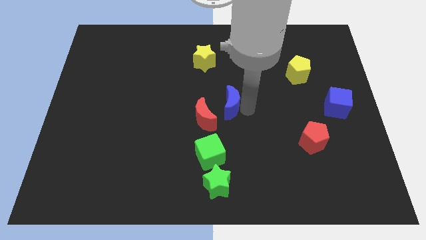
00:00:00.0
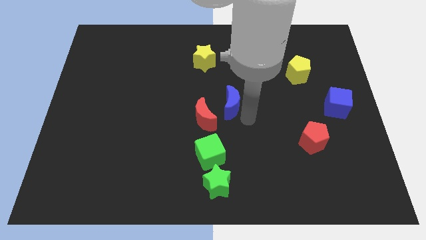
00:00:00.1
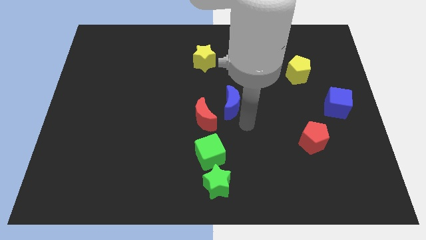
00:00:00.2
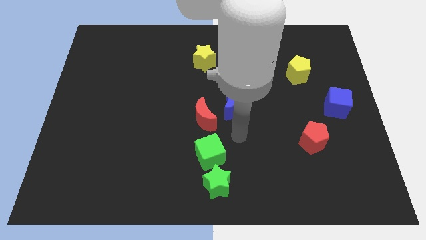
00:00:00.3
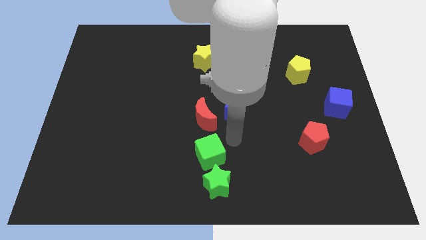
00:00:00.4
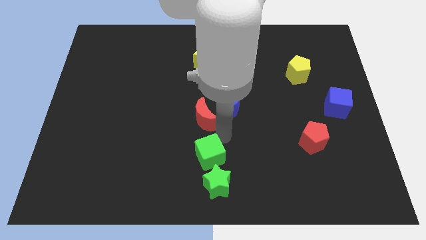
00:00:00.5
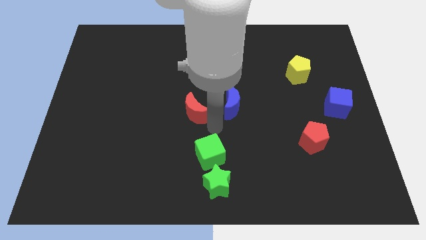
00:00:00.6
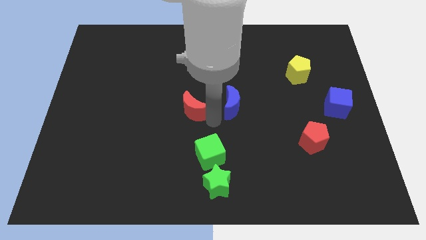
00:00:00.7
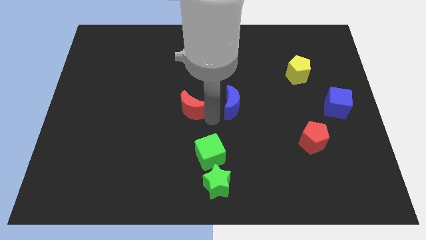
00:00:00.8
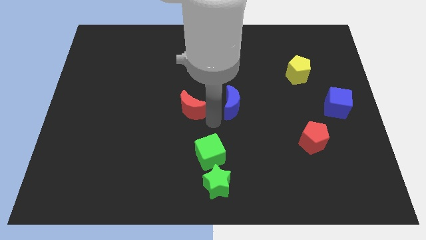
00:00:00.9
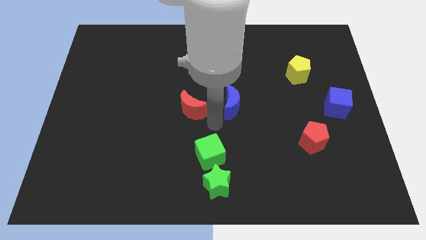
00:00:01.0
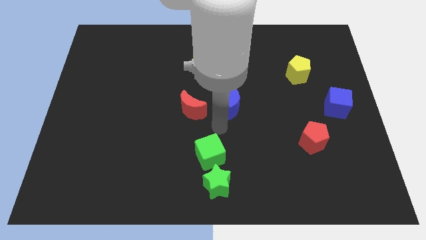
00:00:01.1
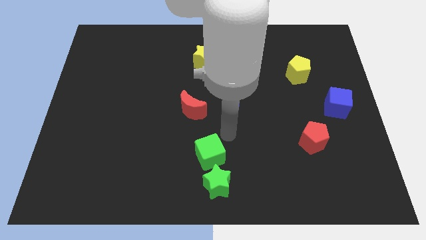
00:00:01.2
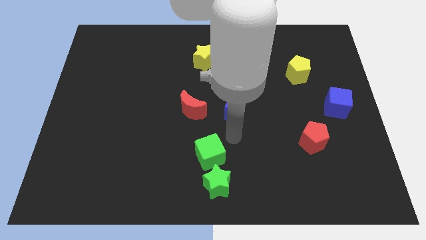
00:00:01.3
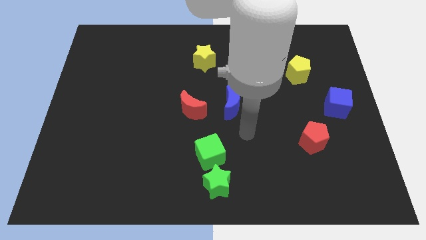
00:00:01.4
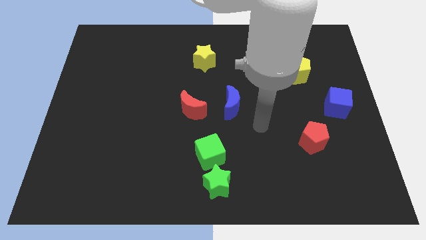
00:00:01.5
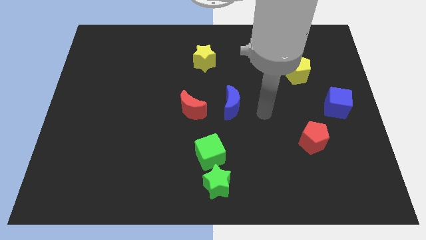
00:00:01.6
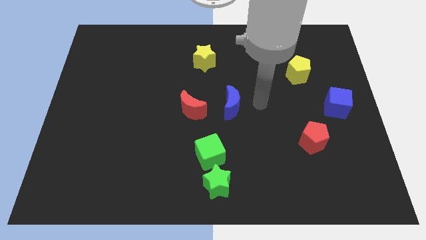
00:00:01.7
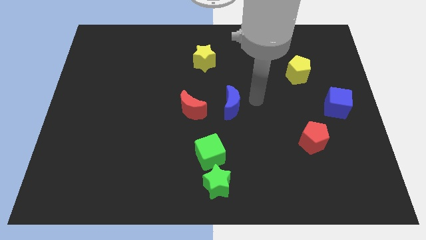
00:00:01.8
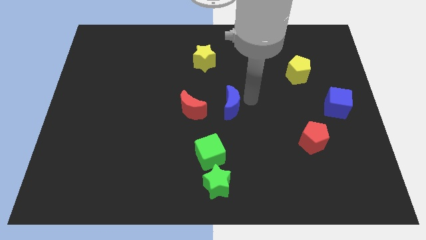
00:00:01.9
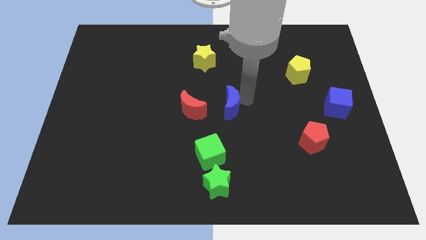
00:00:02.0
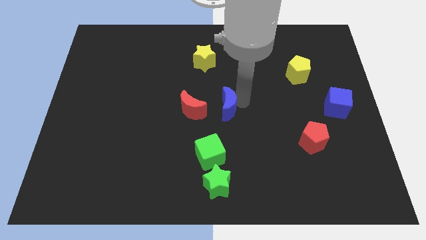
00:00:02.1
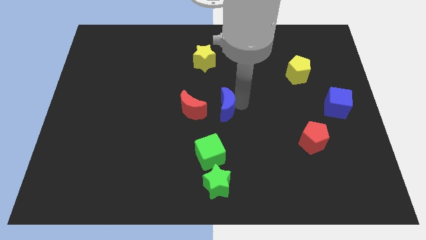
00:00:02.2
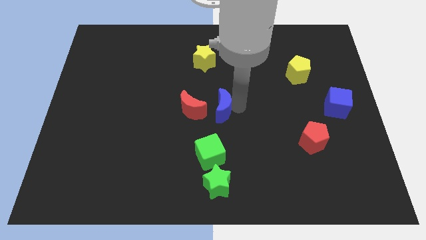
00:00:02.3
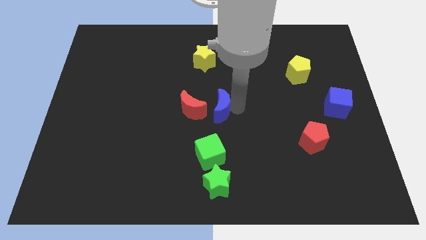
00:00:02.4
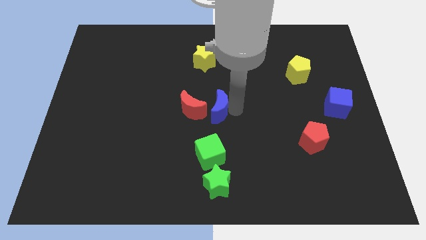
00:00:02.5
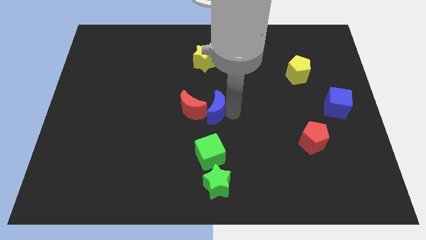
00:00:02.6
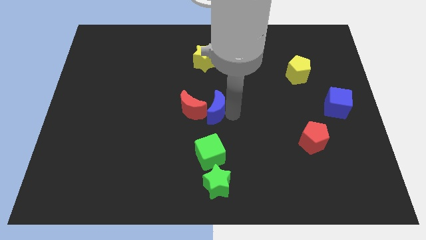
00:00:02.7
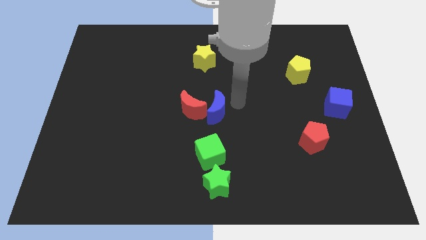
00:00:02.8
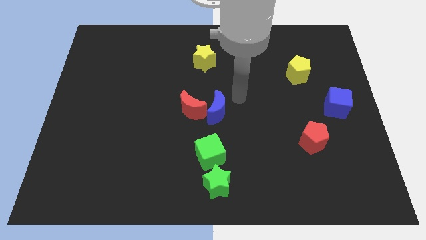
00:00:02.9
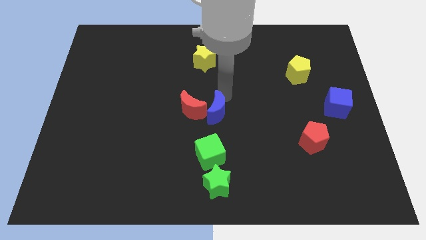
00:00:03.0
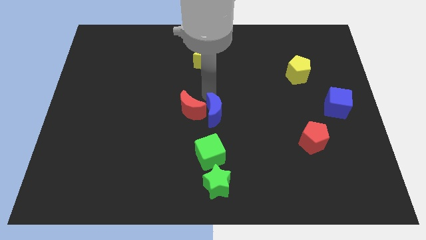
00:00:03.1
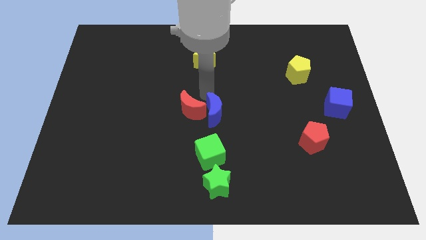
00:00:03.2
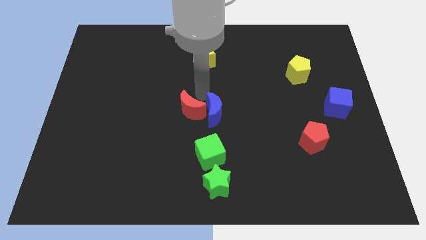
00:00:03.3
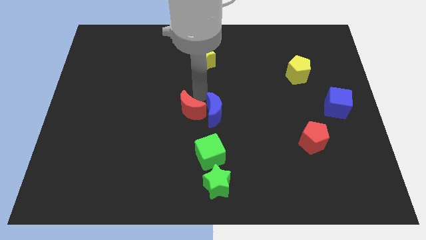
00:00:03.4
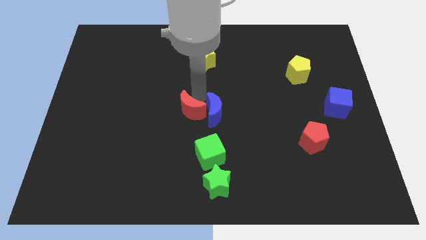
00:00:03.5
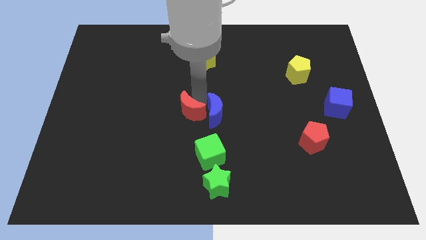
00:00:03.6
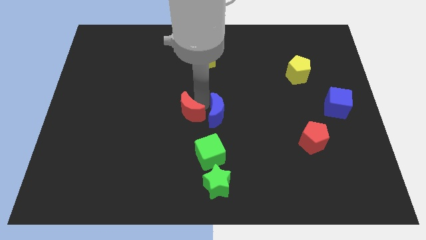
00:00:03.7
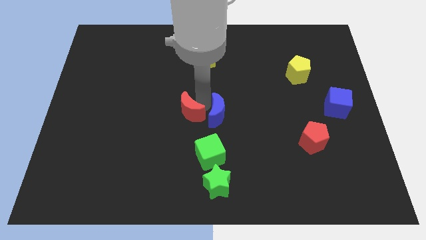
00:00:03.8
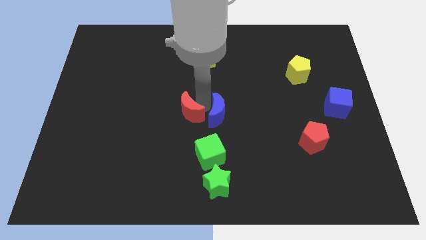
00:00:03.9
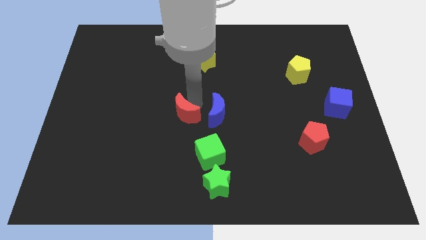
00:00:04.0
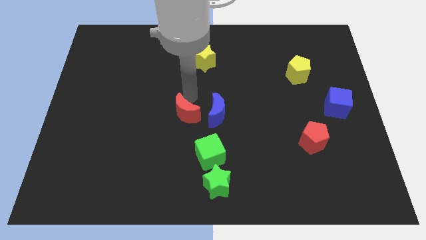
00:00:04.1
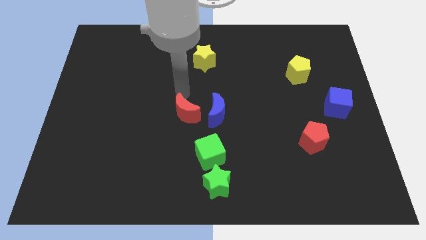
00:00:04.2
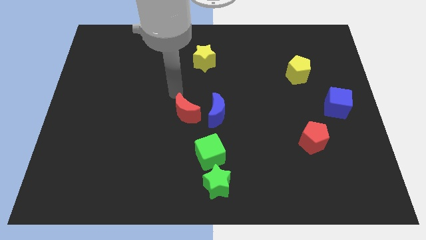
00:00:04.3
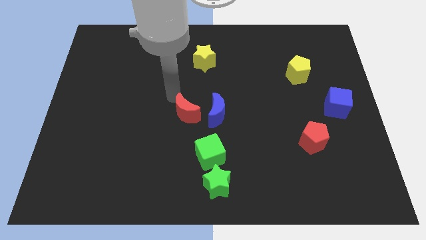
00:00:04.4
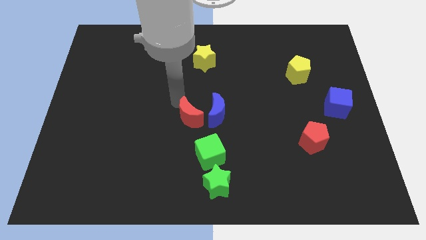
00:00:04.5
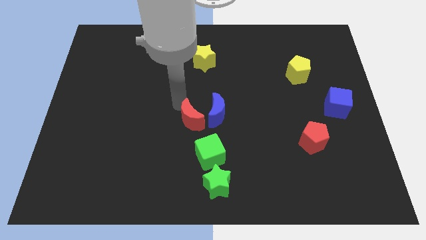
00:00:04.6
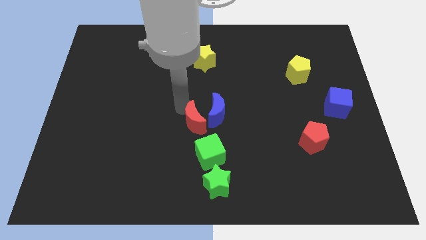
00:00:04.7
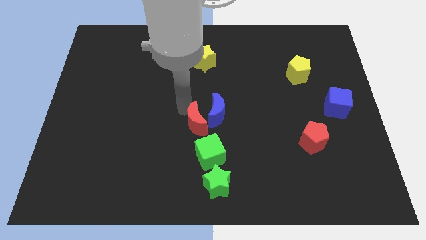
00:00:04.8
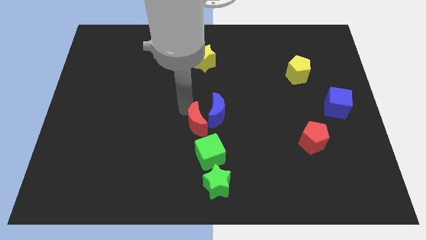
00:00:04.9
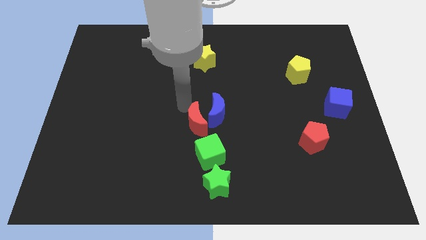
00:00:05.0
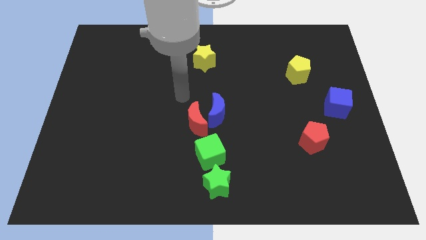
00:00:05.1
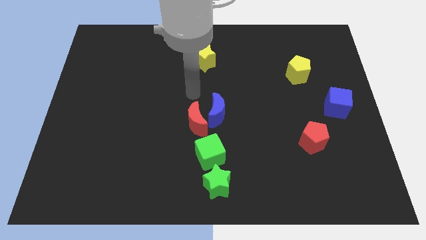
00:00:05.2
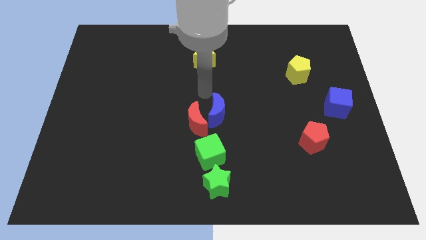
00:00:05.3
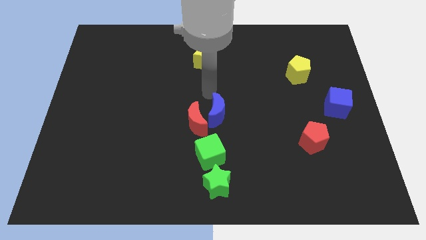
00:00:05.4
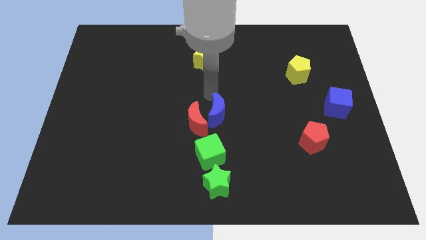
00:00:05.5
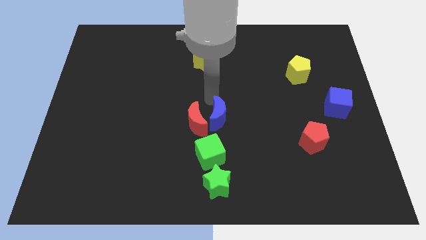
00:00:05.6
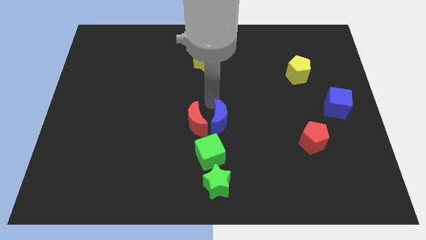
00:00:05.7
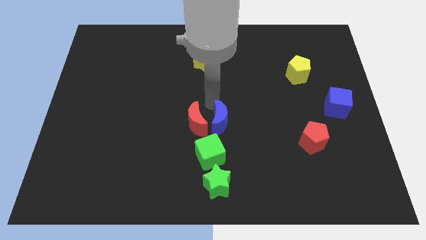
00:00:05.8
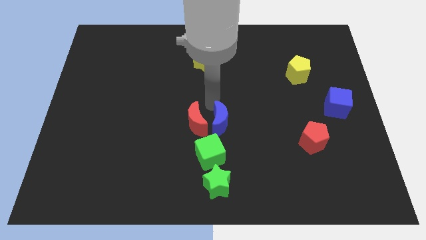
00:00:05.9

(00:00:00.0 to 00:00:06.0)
push the two crescents close to the top side of the green cube

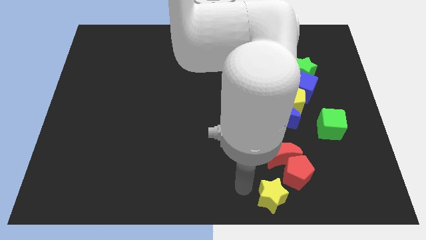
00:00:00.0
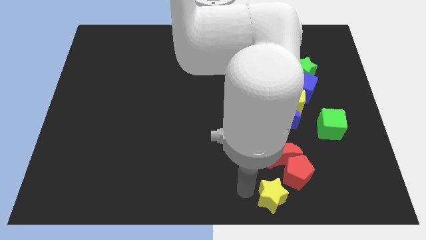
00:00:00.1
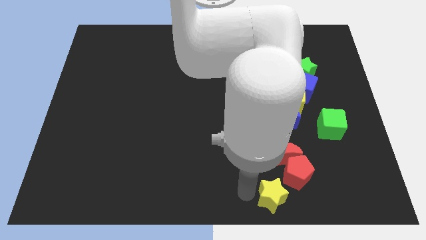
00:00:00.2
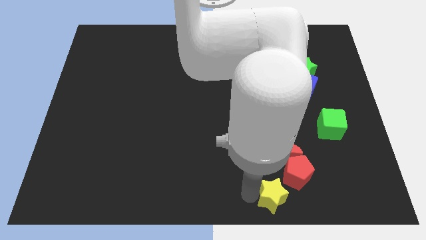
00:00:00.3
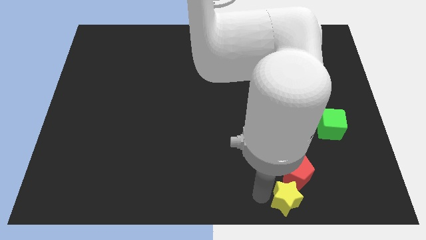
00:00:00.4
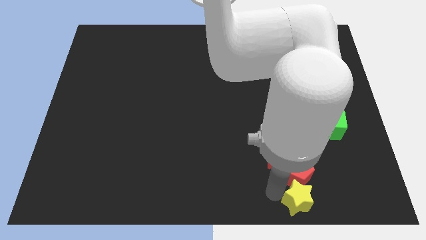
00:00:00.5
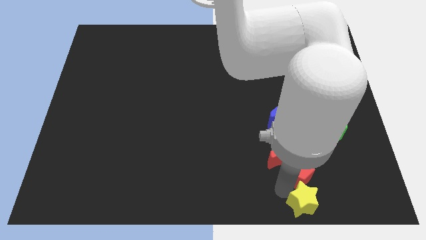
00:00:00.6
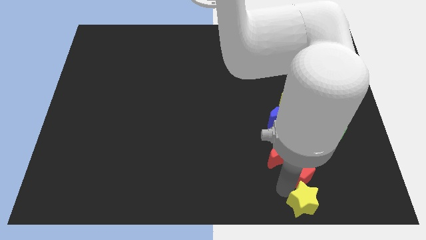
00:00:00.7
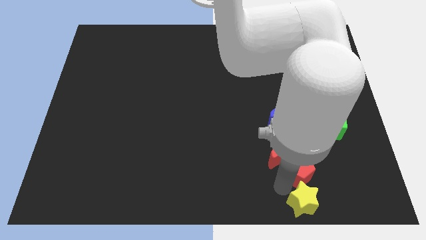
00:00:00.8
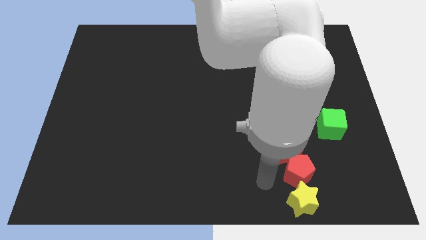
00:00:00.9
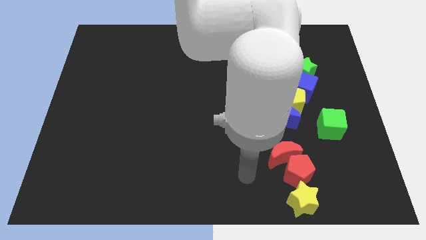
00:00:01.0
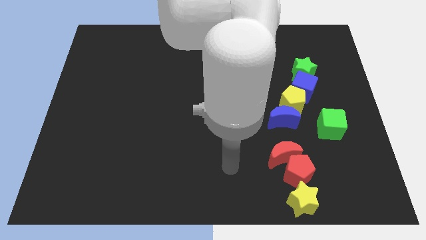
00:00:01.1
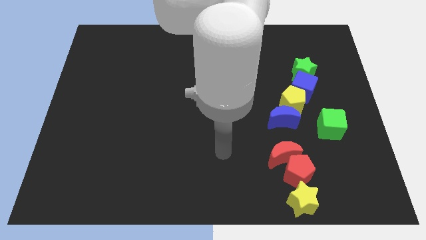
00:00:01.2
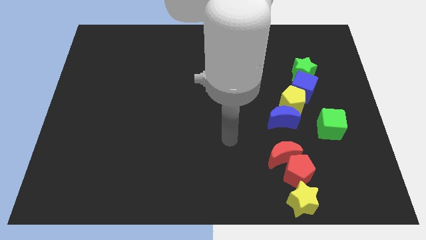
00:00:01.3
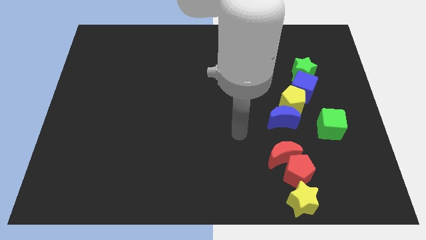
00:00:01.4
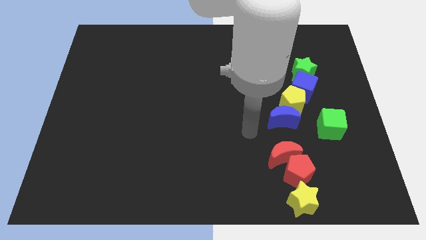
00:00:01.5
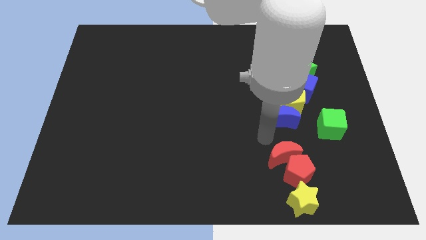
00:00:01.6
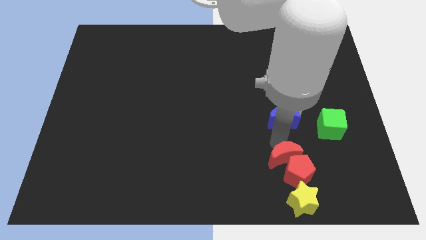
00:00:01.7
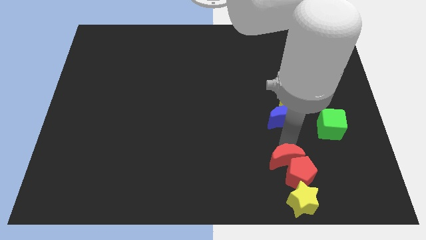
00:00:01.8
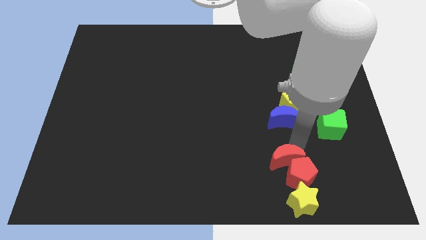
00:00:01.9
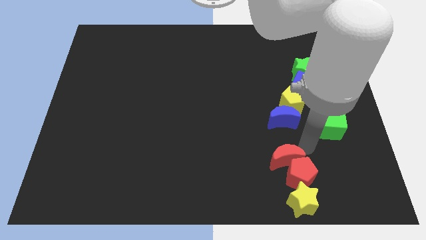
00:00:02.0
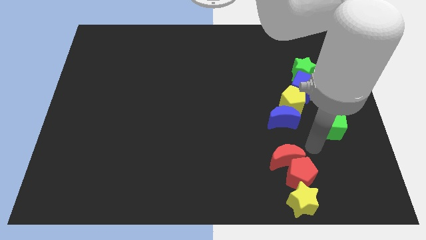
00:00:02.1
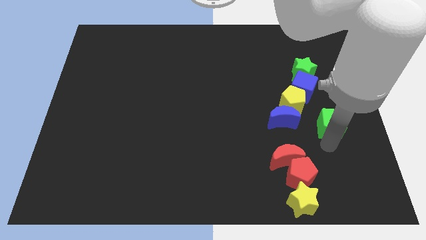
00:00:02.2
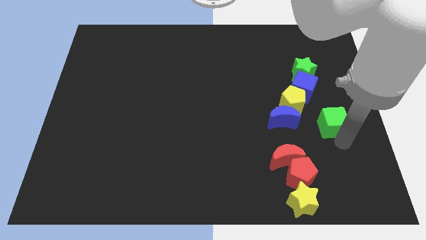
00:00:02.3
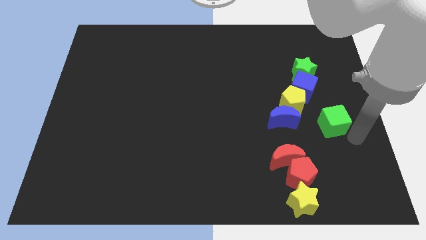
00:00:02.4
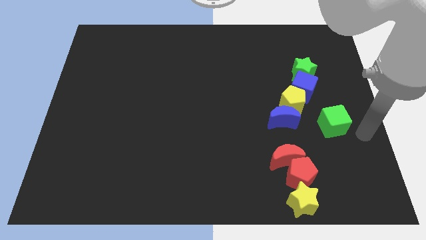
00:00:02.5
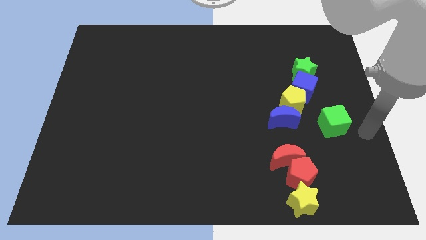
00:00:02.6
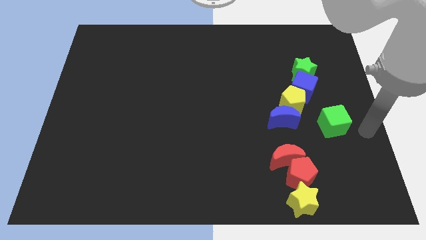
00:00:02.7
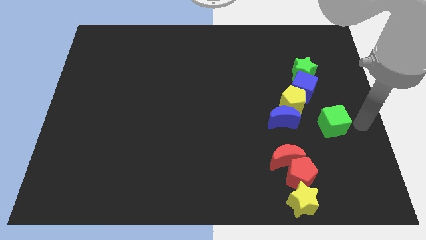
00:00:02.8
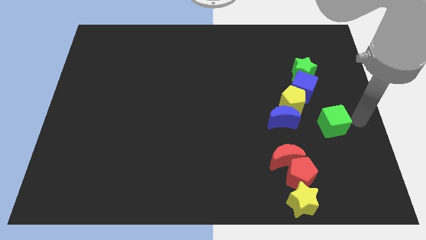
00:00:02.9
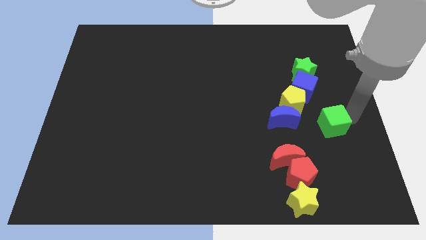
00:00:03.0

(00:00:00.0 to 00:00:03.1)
put the yellow star at the bottom of the red pentagon
